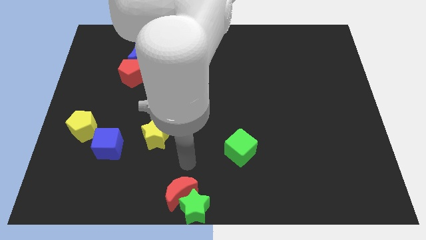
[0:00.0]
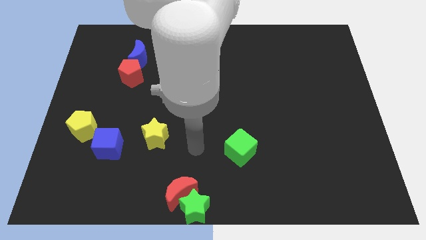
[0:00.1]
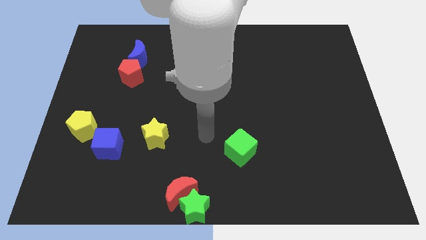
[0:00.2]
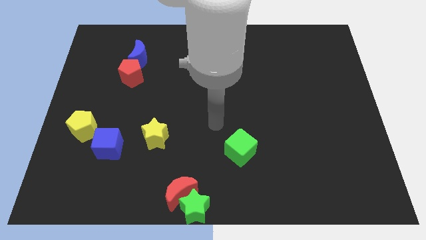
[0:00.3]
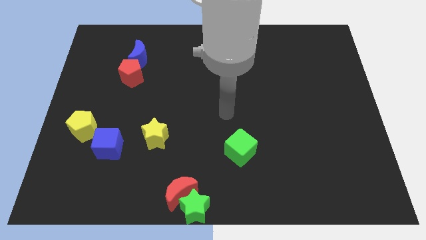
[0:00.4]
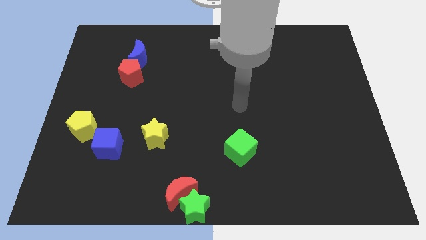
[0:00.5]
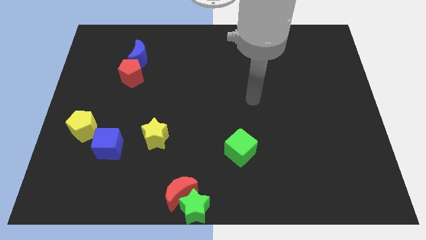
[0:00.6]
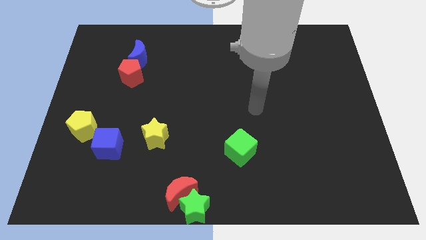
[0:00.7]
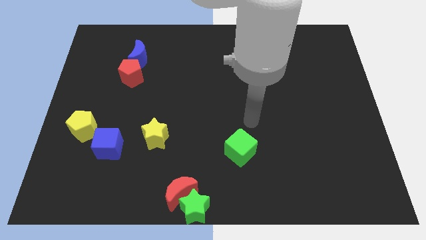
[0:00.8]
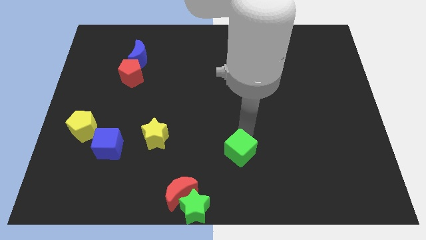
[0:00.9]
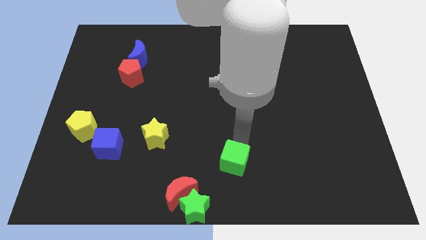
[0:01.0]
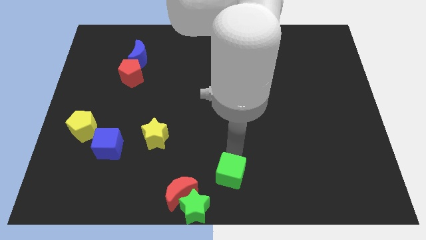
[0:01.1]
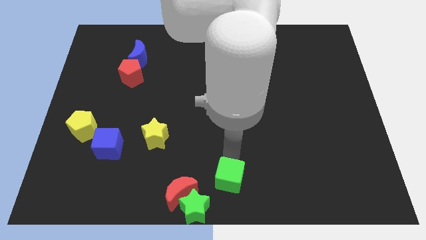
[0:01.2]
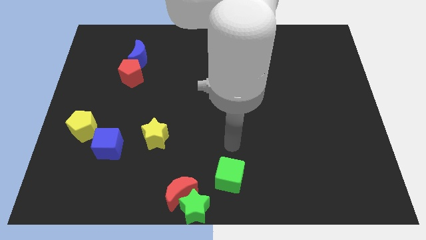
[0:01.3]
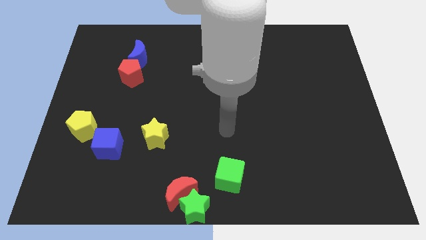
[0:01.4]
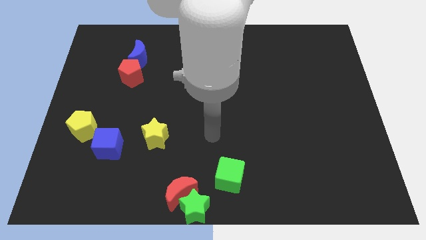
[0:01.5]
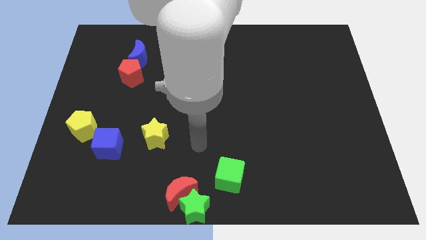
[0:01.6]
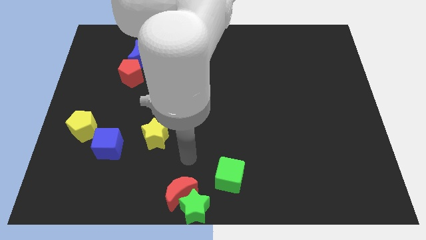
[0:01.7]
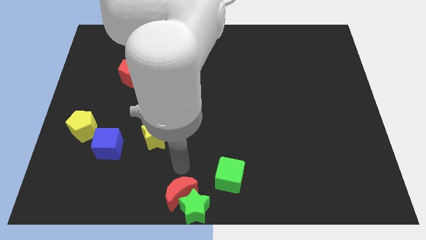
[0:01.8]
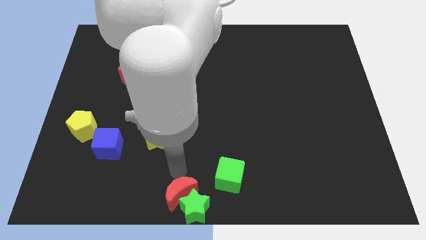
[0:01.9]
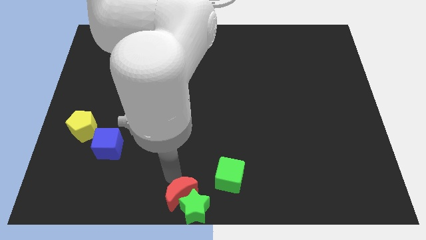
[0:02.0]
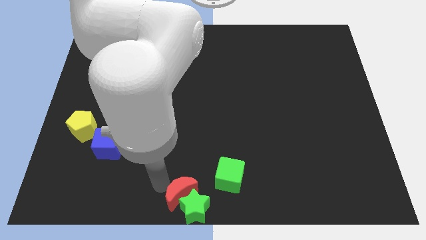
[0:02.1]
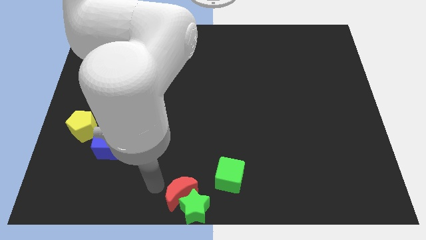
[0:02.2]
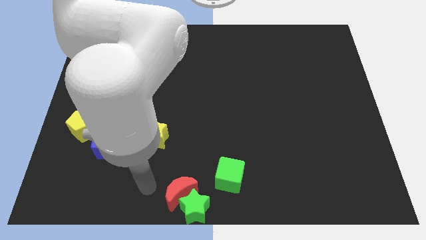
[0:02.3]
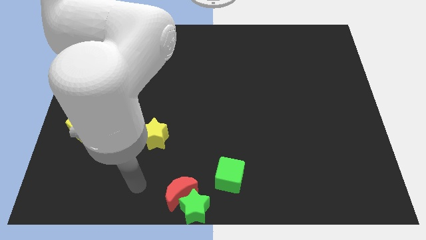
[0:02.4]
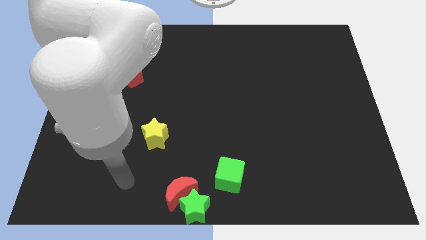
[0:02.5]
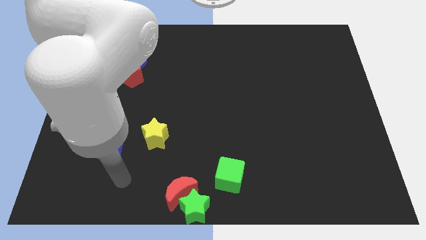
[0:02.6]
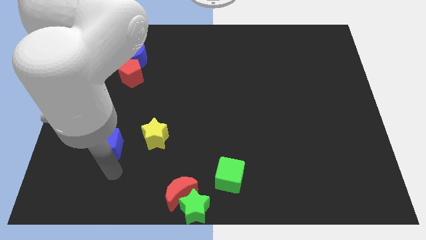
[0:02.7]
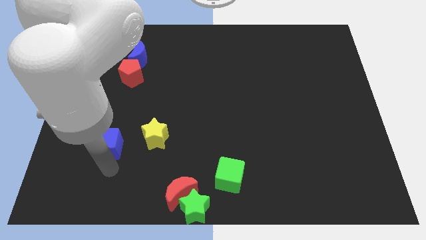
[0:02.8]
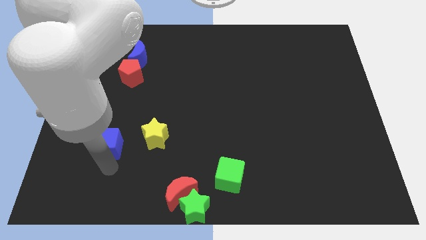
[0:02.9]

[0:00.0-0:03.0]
move the green cube near the green star

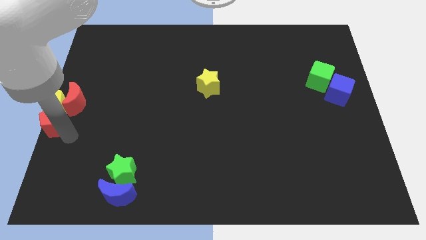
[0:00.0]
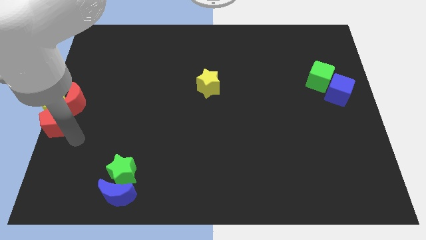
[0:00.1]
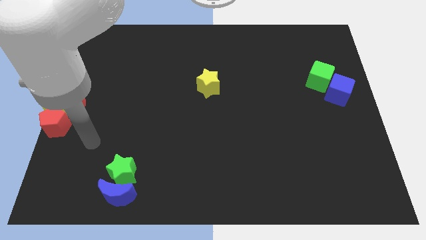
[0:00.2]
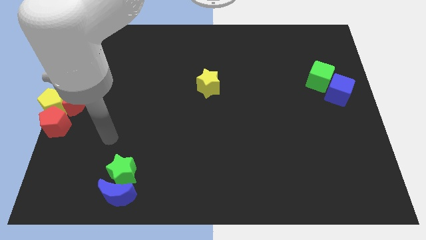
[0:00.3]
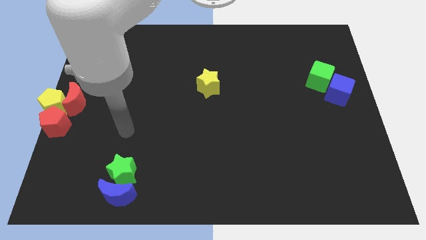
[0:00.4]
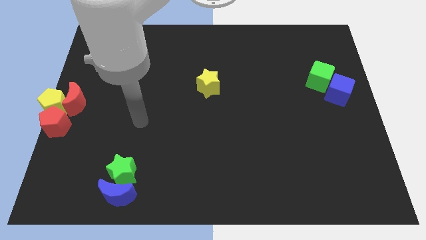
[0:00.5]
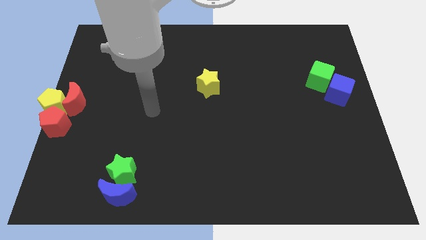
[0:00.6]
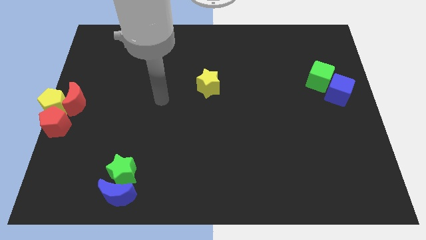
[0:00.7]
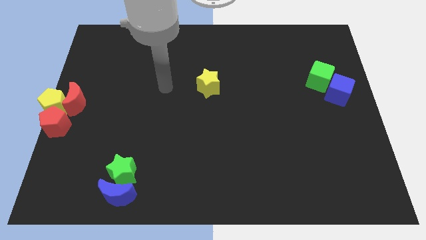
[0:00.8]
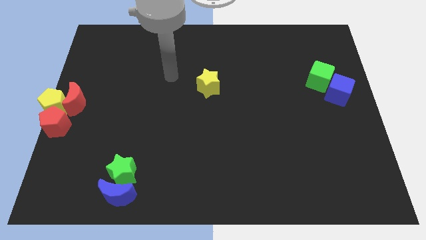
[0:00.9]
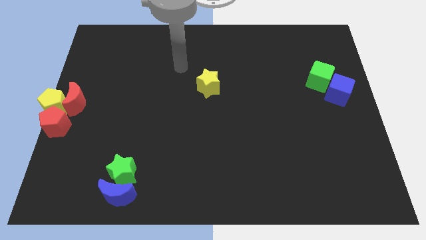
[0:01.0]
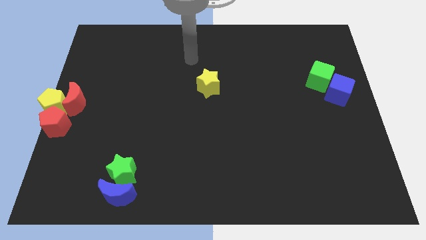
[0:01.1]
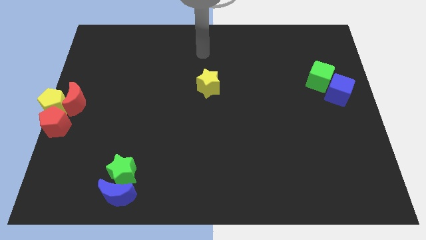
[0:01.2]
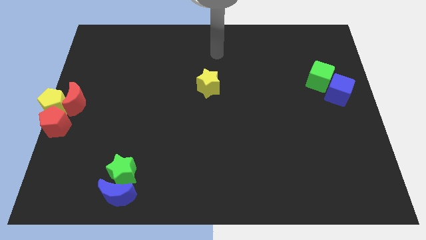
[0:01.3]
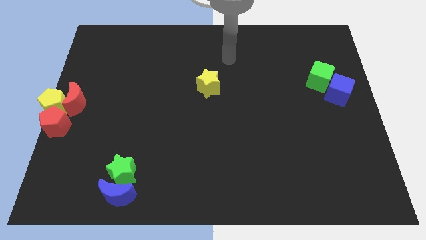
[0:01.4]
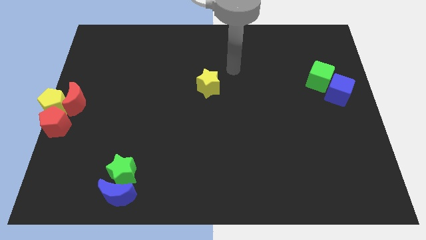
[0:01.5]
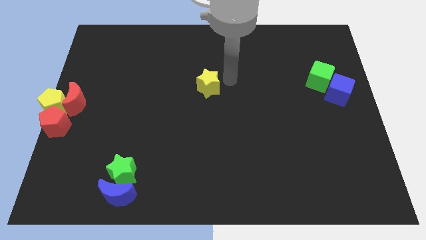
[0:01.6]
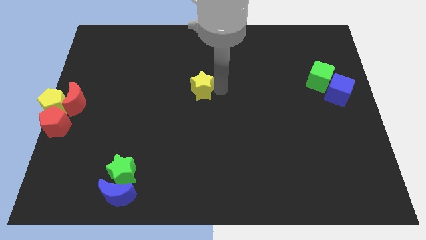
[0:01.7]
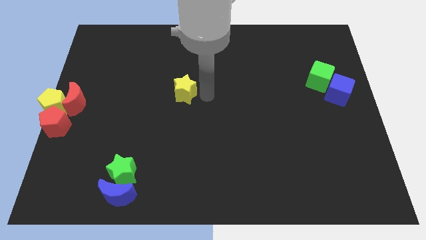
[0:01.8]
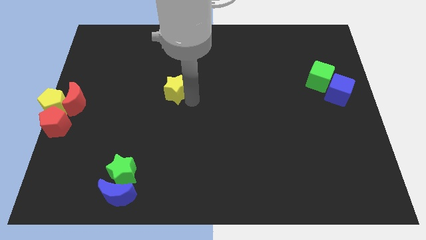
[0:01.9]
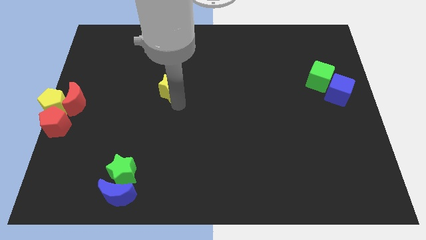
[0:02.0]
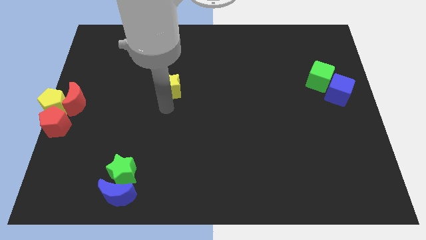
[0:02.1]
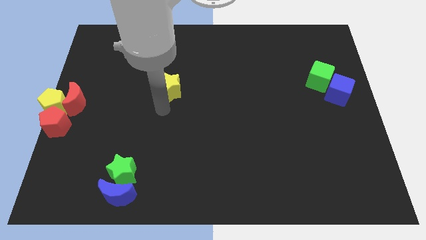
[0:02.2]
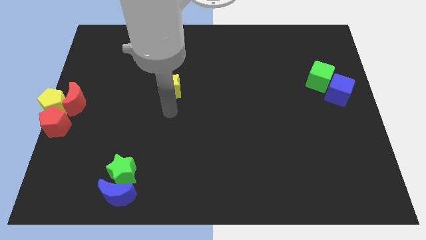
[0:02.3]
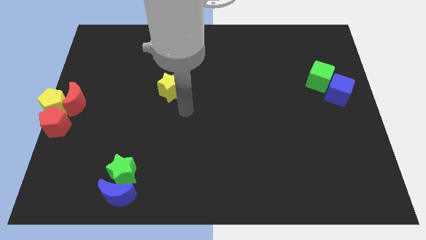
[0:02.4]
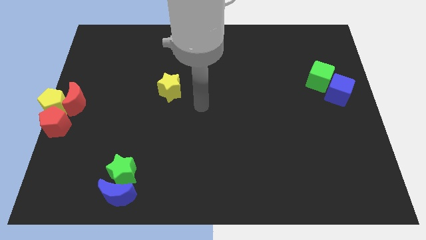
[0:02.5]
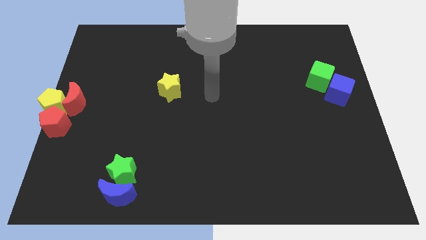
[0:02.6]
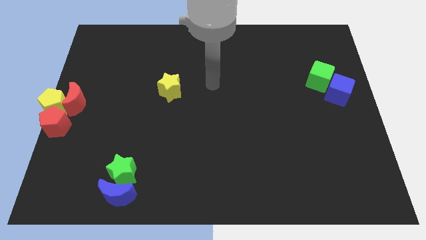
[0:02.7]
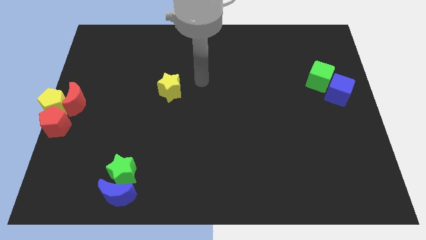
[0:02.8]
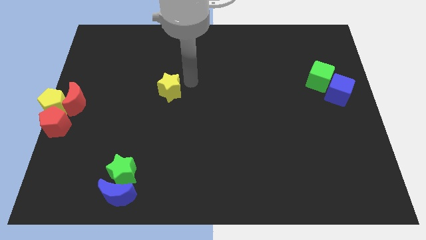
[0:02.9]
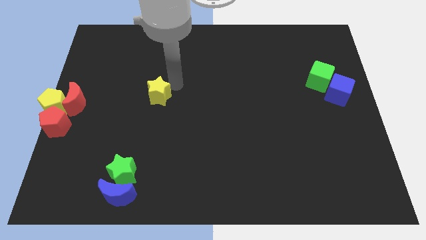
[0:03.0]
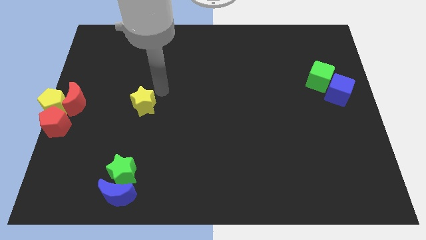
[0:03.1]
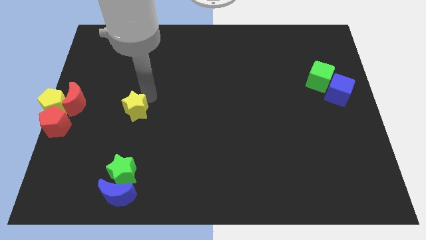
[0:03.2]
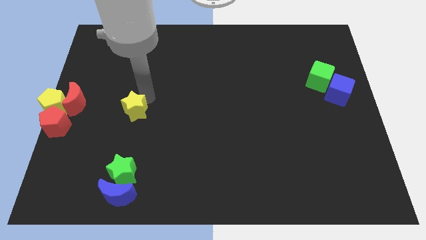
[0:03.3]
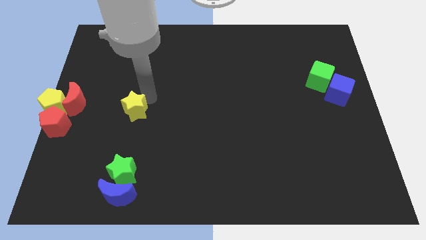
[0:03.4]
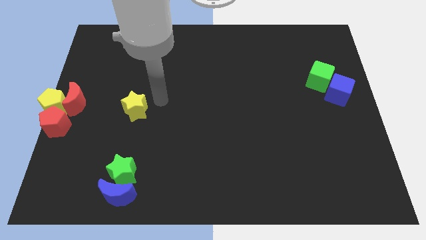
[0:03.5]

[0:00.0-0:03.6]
place the yellow star vertically above the top side of the green star

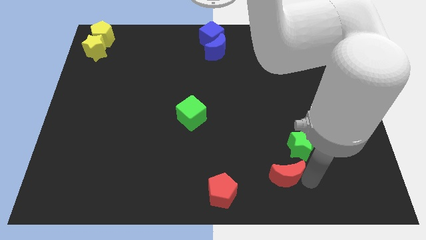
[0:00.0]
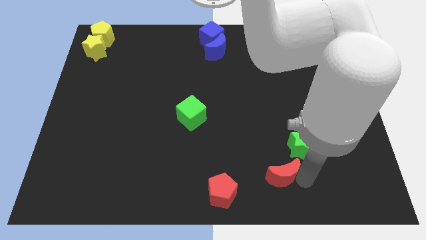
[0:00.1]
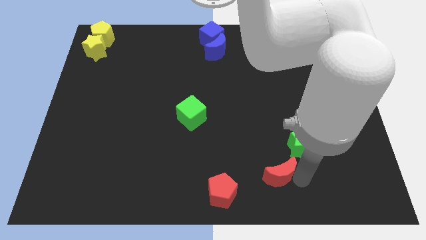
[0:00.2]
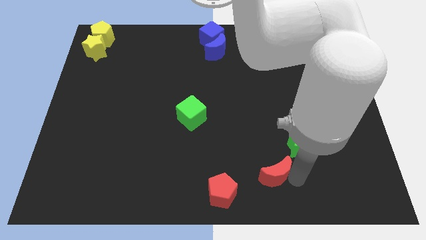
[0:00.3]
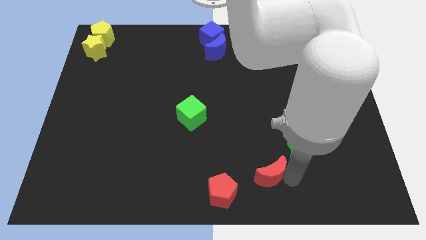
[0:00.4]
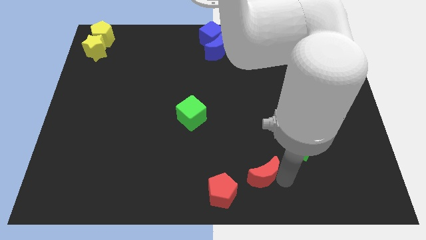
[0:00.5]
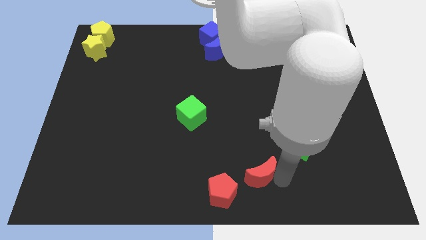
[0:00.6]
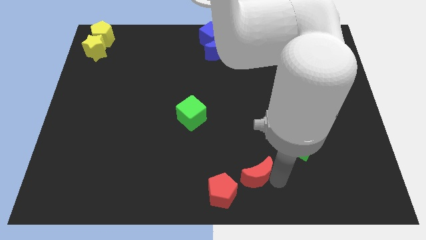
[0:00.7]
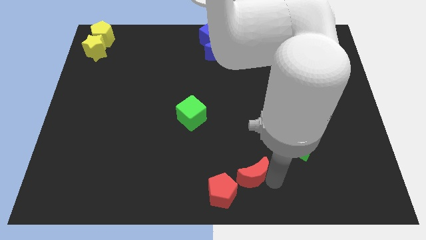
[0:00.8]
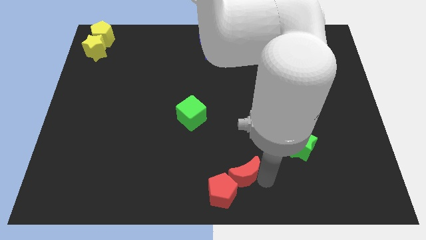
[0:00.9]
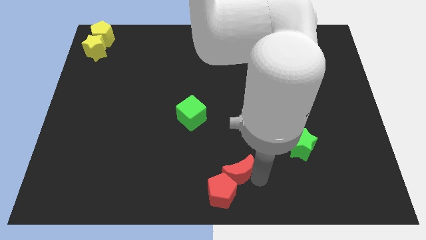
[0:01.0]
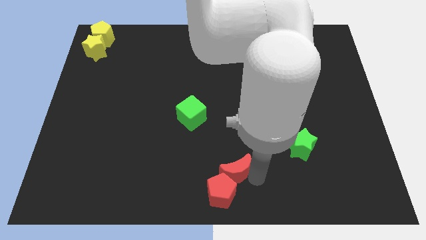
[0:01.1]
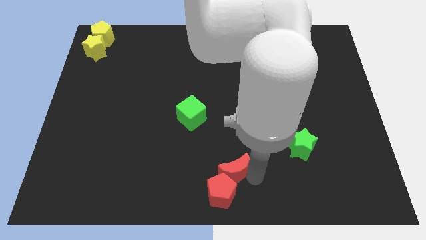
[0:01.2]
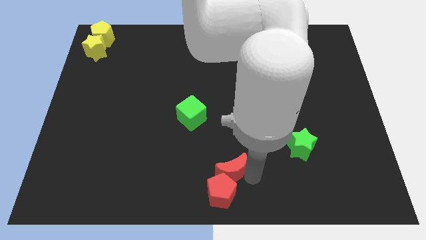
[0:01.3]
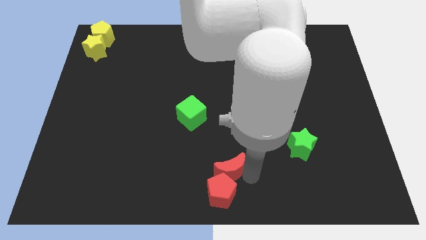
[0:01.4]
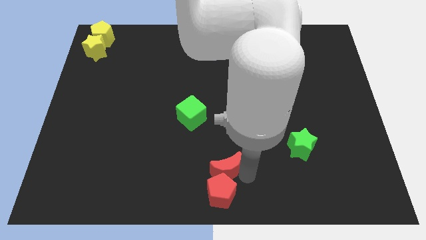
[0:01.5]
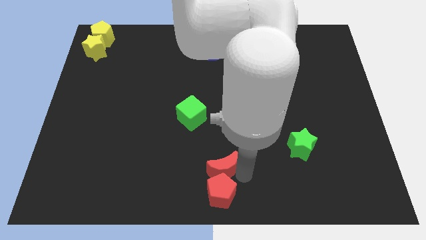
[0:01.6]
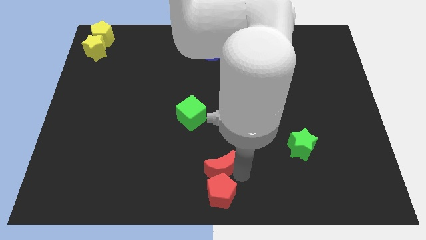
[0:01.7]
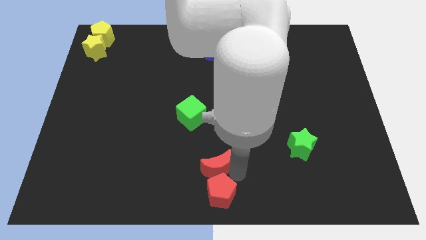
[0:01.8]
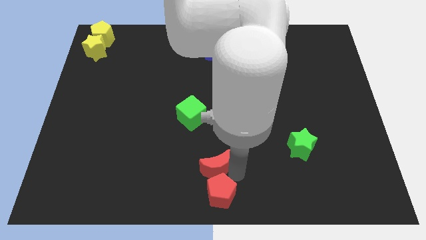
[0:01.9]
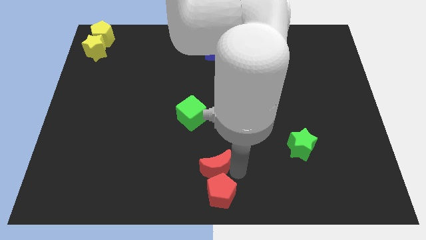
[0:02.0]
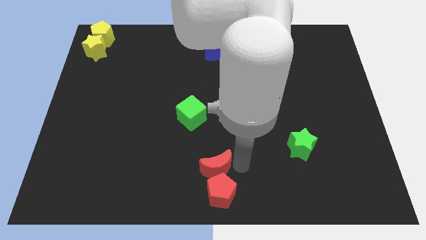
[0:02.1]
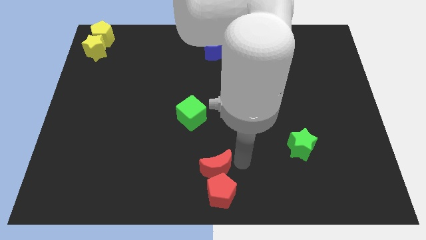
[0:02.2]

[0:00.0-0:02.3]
move the red crescent towards the top of red pentagon
